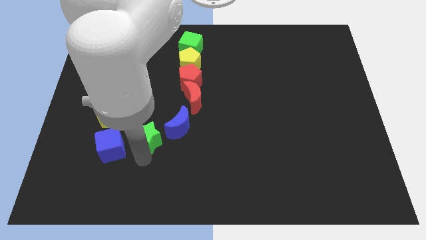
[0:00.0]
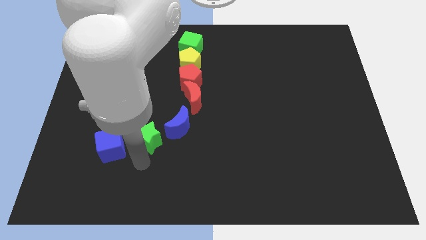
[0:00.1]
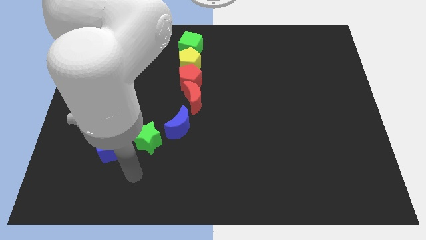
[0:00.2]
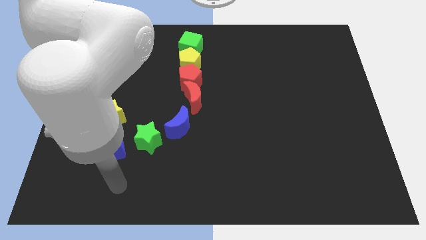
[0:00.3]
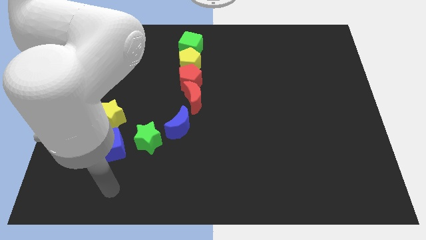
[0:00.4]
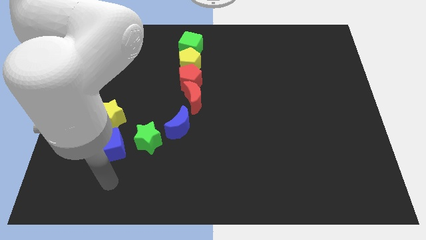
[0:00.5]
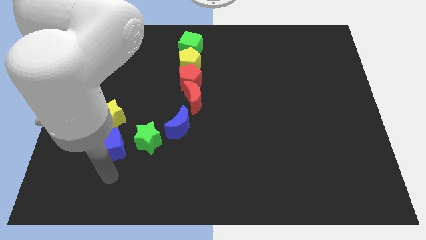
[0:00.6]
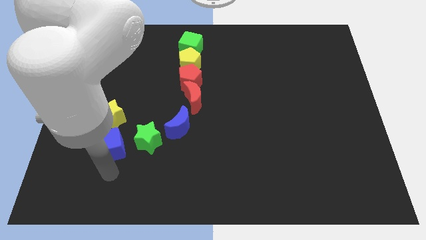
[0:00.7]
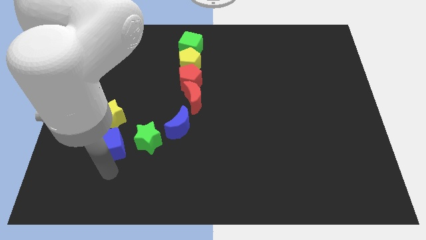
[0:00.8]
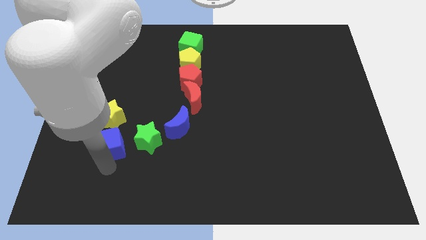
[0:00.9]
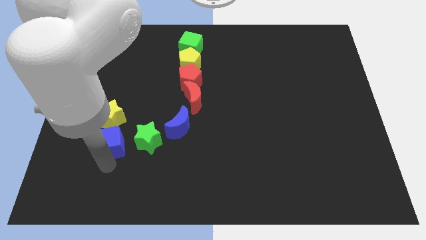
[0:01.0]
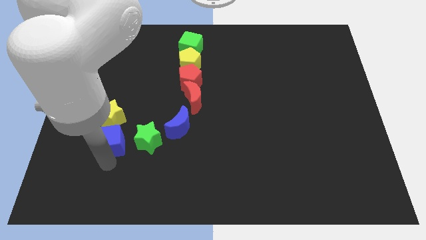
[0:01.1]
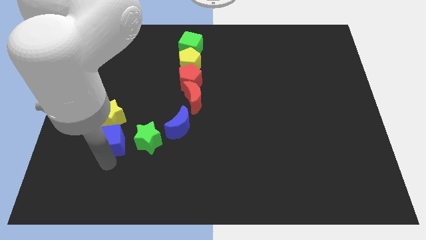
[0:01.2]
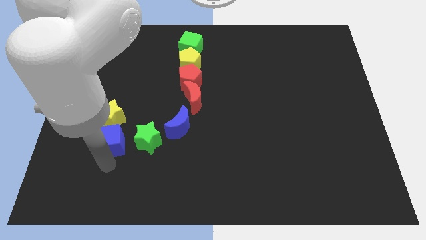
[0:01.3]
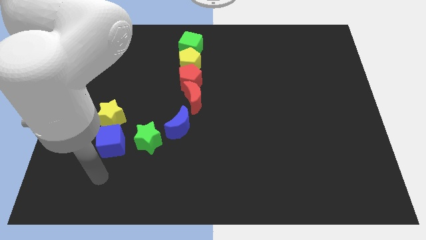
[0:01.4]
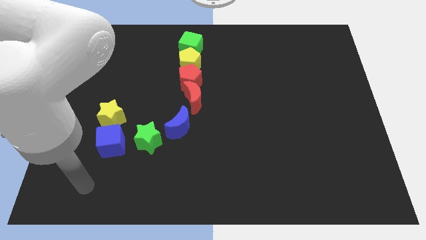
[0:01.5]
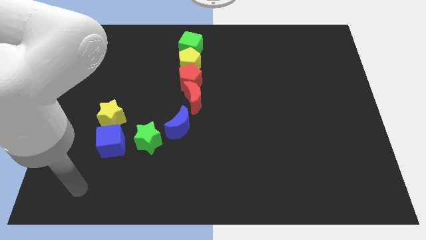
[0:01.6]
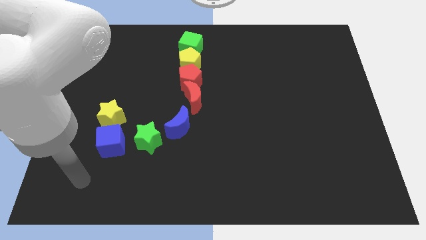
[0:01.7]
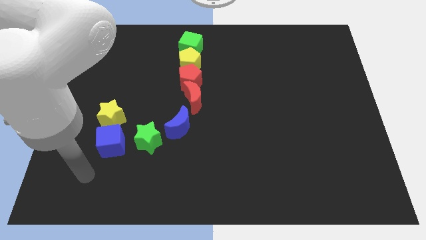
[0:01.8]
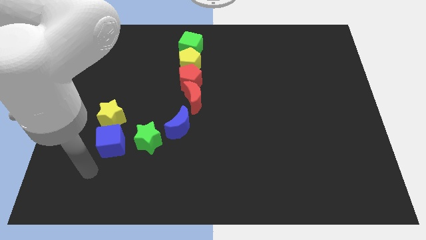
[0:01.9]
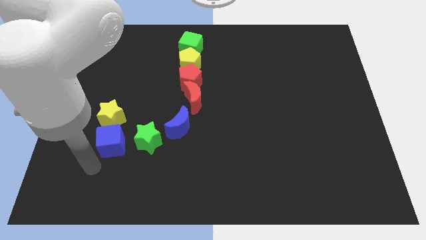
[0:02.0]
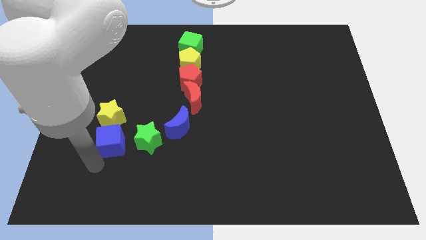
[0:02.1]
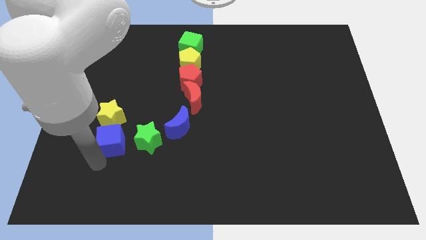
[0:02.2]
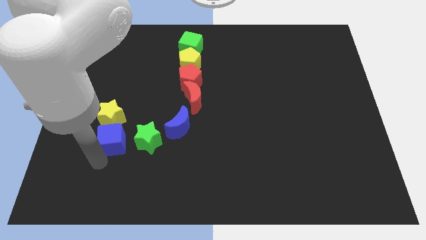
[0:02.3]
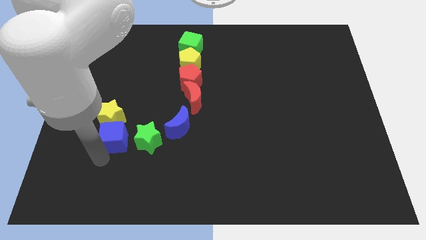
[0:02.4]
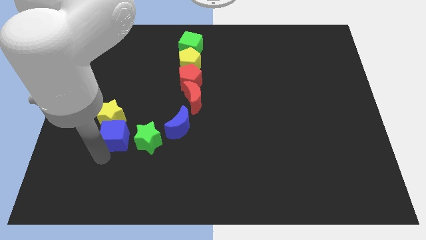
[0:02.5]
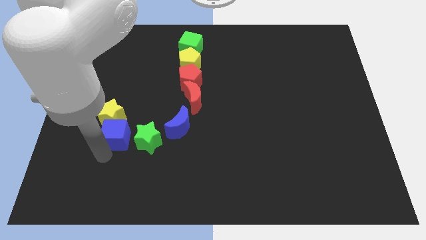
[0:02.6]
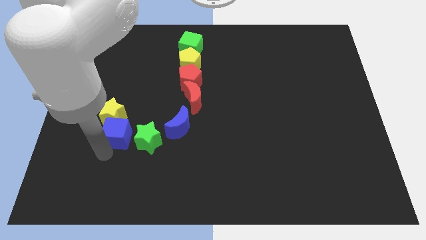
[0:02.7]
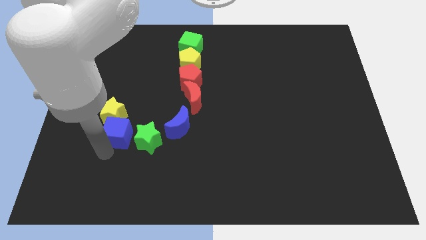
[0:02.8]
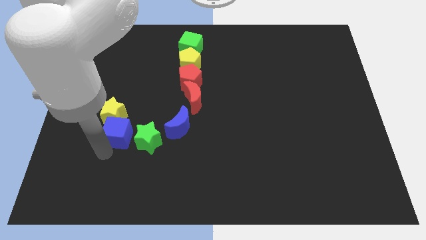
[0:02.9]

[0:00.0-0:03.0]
slightly move the blue cube towards up

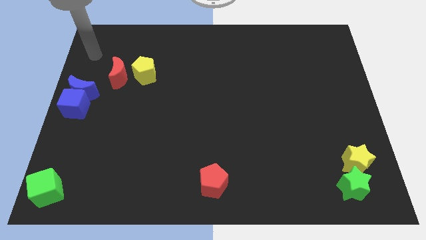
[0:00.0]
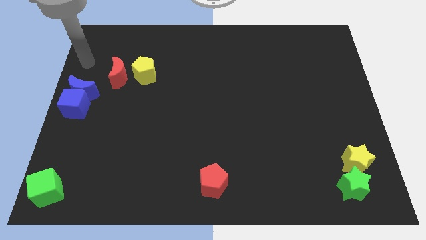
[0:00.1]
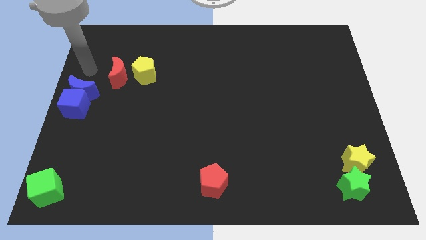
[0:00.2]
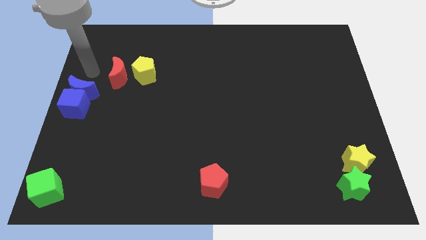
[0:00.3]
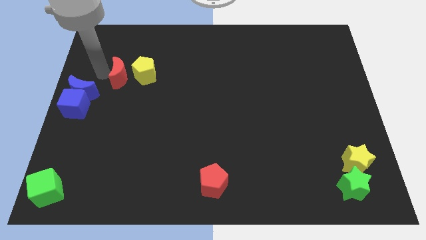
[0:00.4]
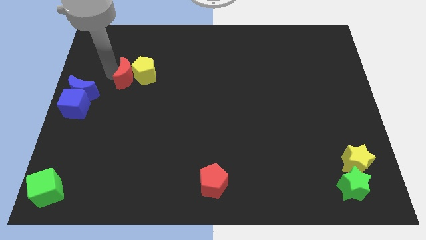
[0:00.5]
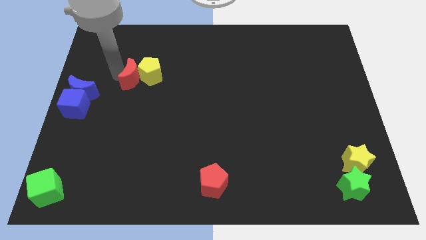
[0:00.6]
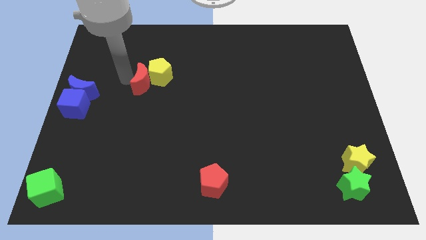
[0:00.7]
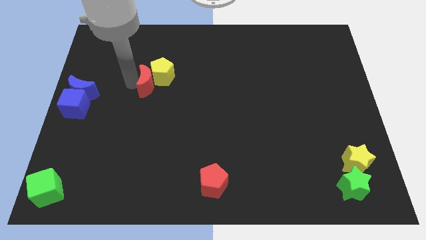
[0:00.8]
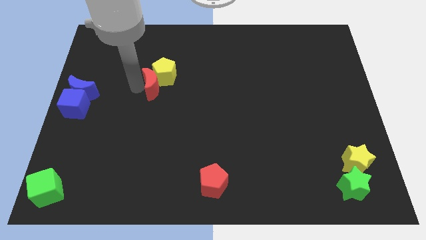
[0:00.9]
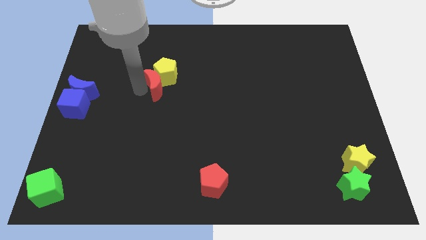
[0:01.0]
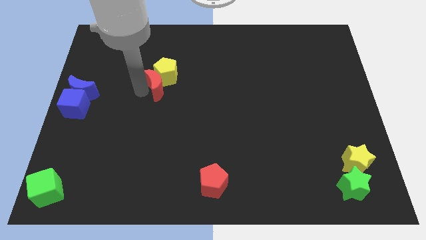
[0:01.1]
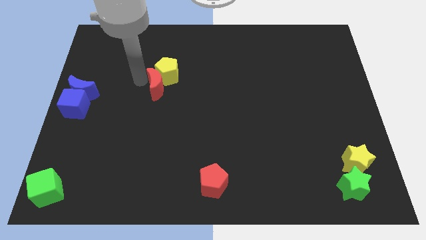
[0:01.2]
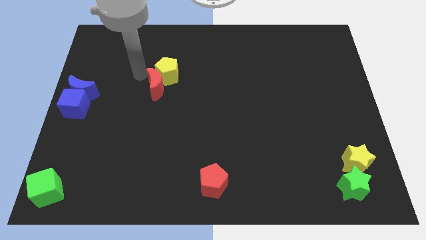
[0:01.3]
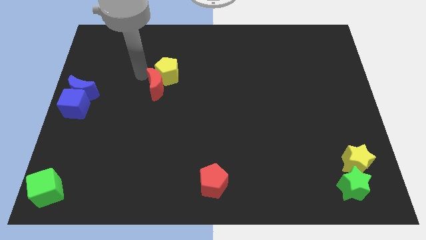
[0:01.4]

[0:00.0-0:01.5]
push the red moon into the yellow pentagon

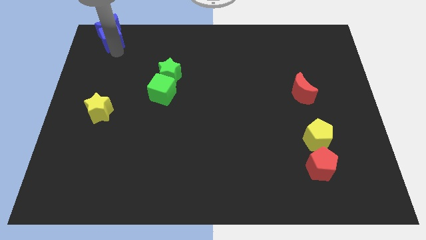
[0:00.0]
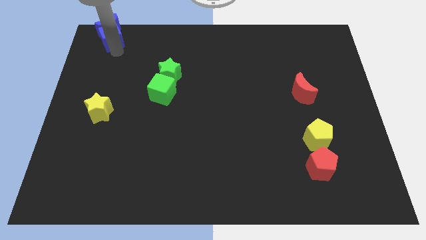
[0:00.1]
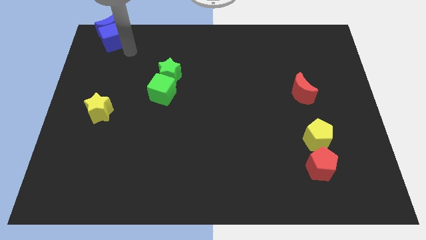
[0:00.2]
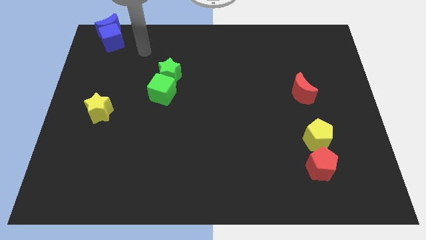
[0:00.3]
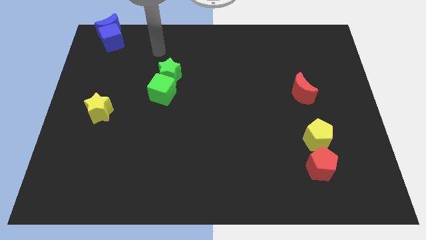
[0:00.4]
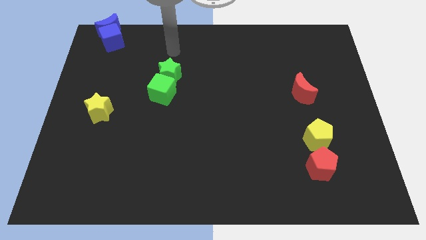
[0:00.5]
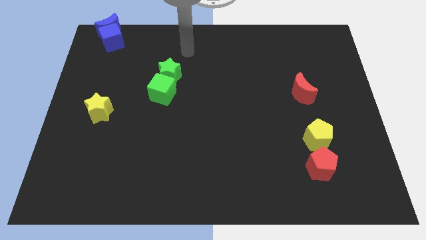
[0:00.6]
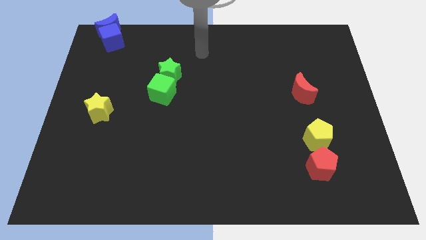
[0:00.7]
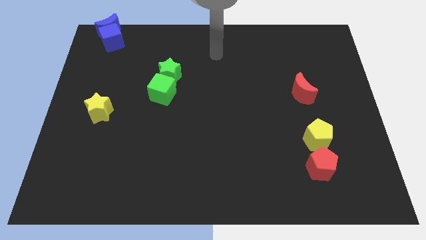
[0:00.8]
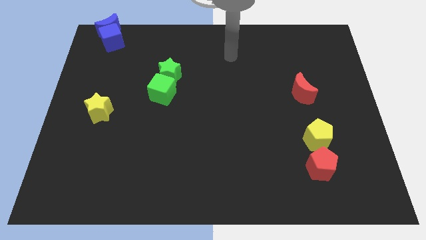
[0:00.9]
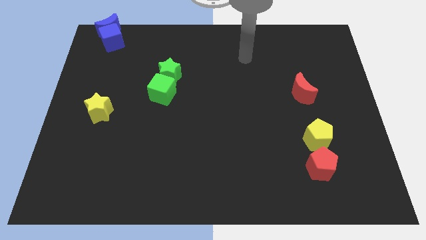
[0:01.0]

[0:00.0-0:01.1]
move your arm towards the right side of the board

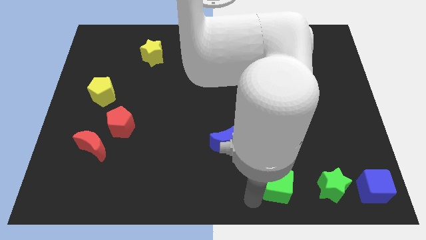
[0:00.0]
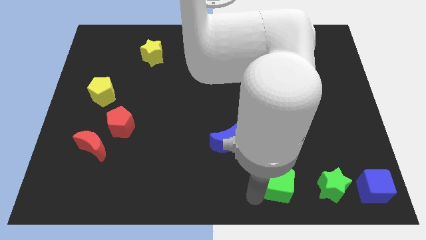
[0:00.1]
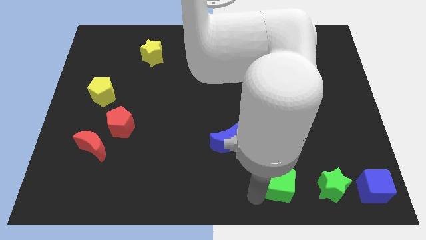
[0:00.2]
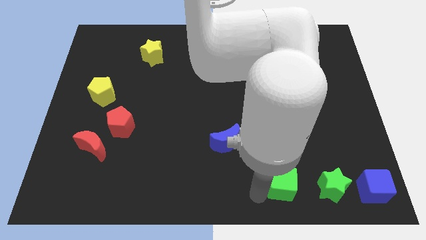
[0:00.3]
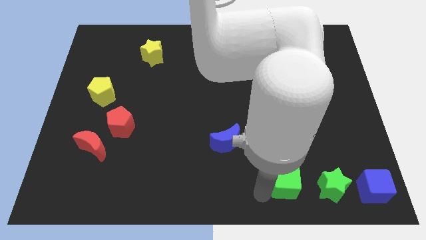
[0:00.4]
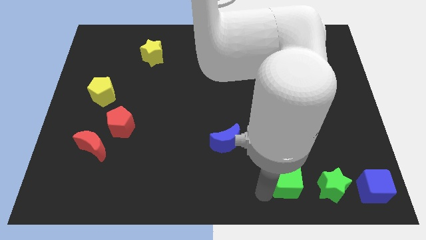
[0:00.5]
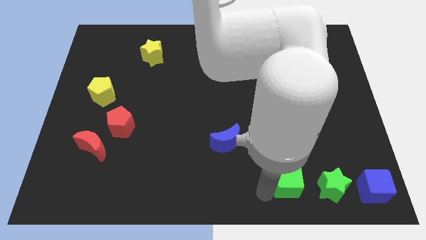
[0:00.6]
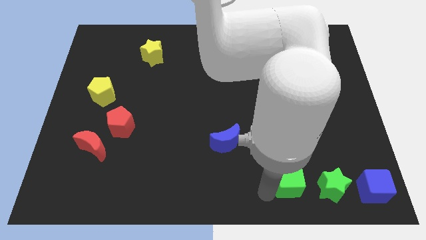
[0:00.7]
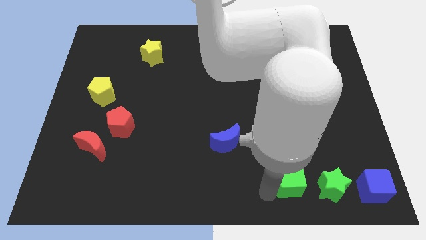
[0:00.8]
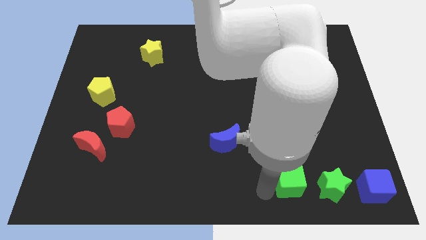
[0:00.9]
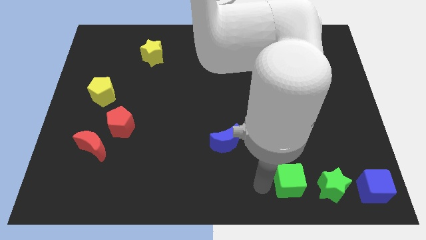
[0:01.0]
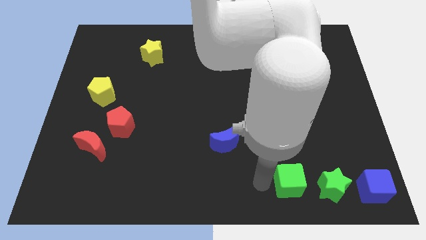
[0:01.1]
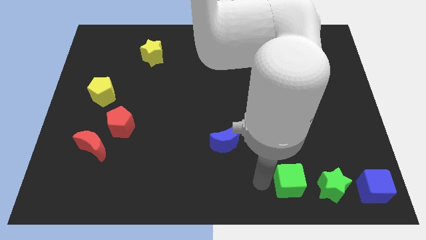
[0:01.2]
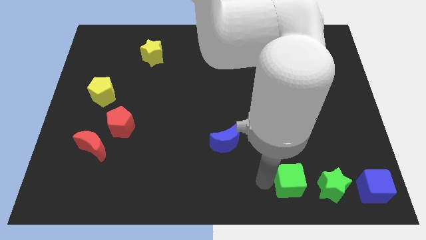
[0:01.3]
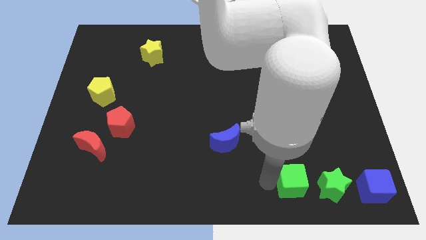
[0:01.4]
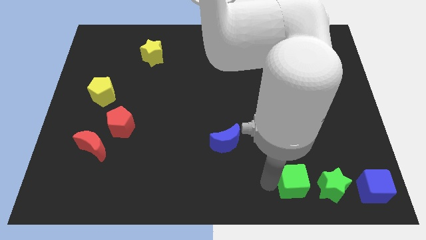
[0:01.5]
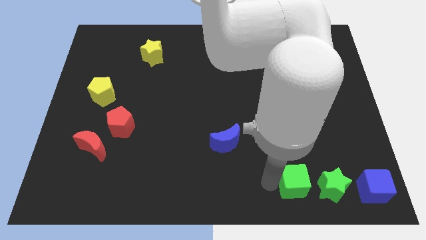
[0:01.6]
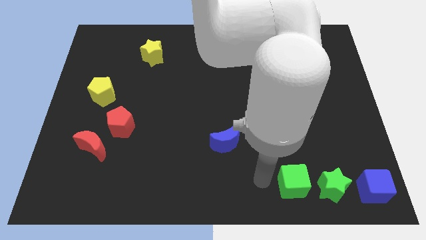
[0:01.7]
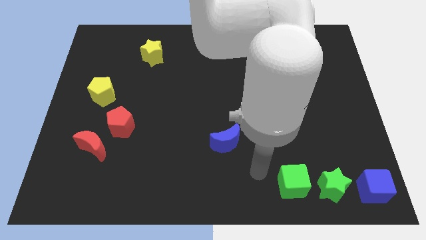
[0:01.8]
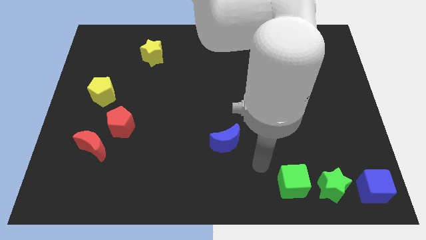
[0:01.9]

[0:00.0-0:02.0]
push the green cube beside green star at the bottom

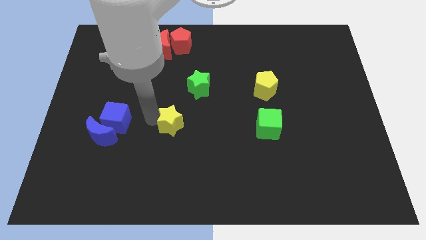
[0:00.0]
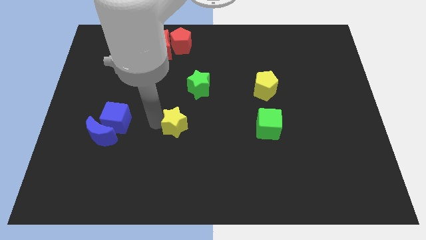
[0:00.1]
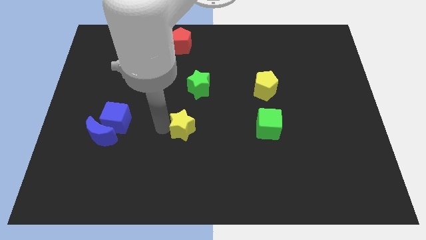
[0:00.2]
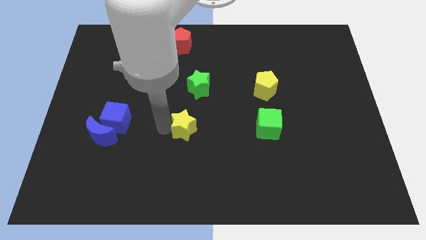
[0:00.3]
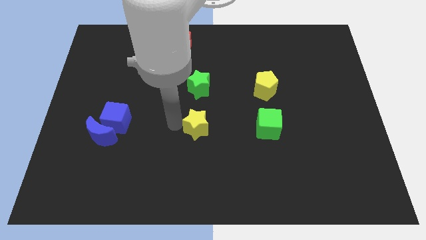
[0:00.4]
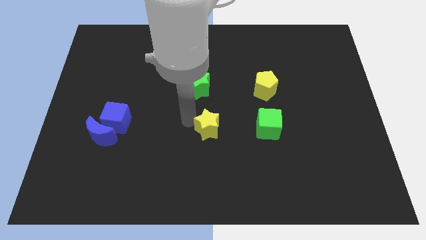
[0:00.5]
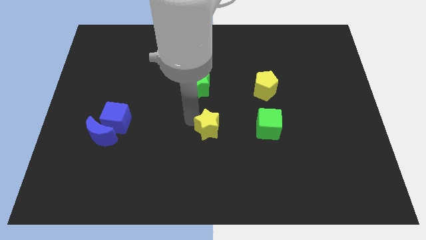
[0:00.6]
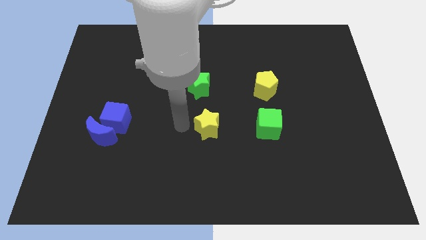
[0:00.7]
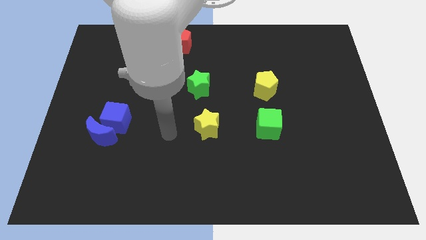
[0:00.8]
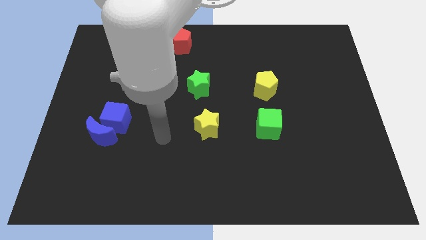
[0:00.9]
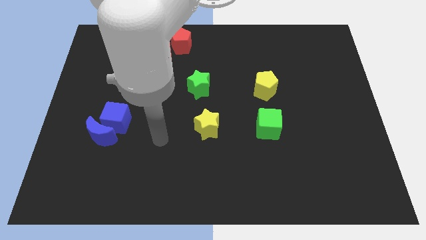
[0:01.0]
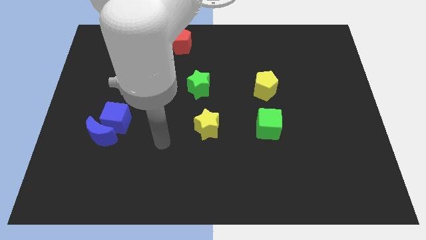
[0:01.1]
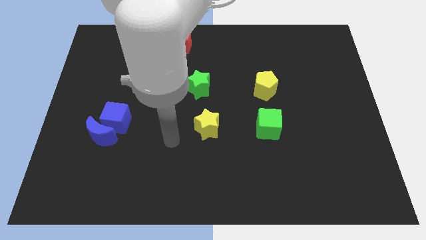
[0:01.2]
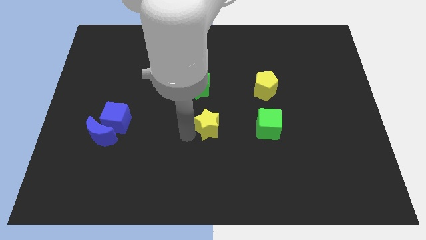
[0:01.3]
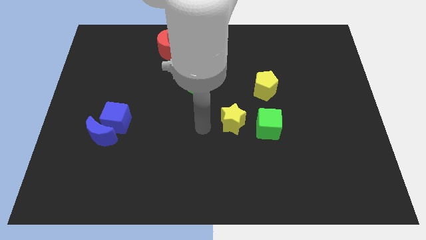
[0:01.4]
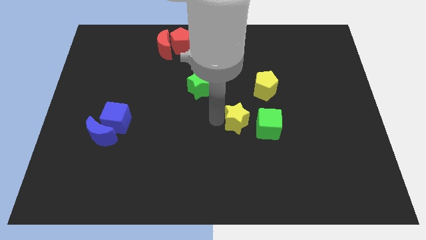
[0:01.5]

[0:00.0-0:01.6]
move the yellow star to the left of green cube
